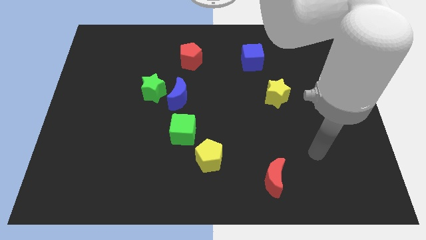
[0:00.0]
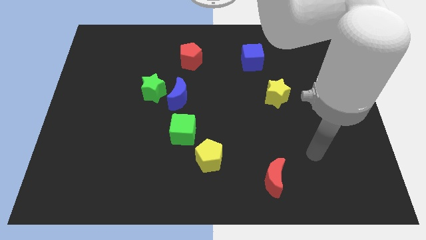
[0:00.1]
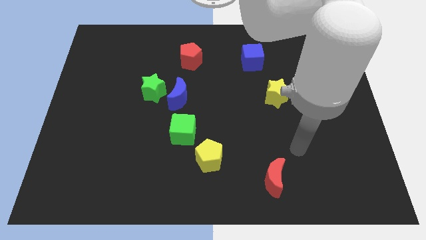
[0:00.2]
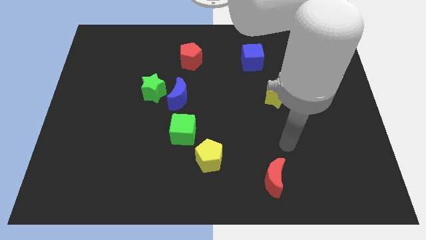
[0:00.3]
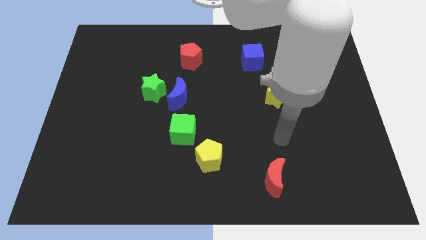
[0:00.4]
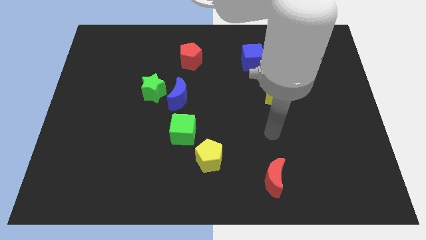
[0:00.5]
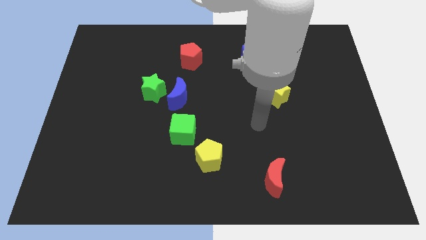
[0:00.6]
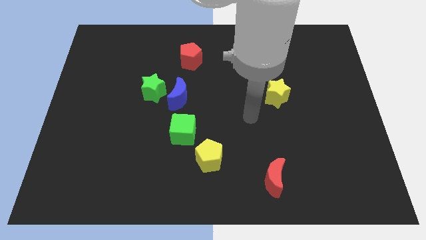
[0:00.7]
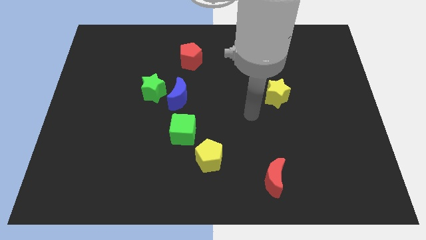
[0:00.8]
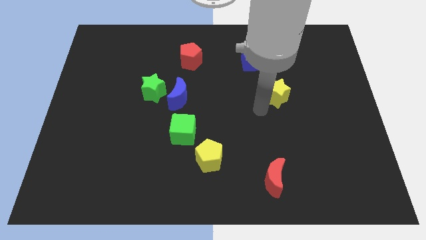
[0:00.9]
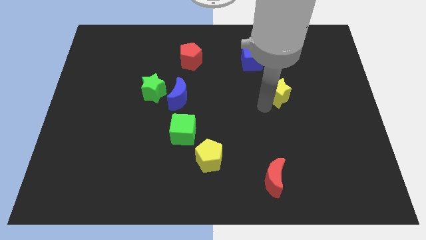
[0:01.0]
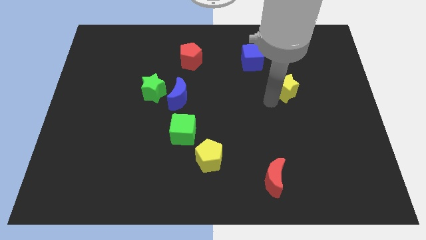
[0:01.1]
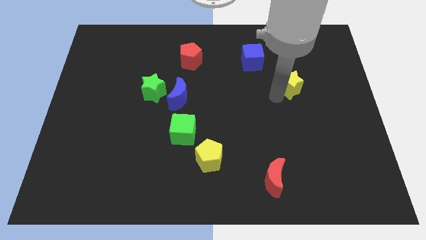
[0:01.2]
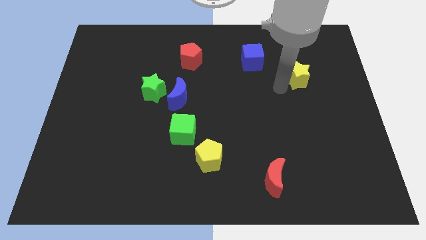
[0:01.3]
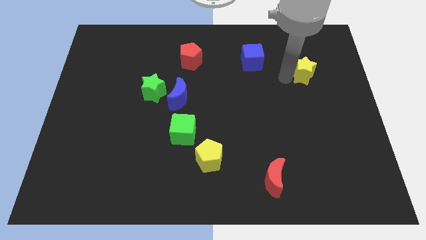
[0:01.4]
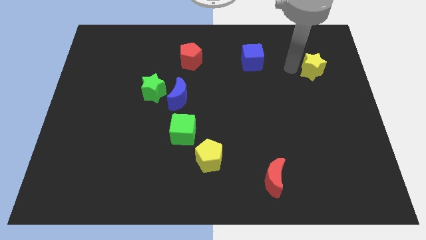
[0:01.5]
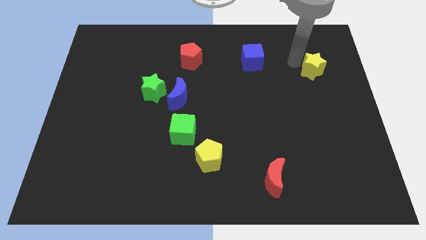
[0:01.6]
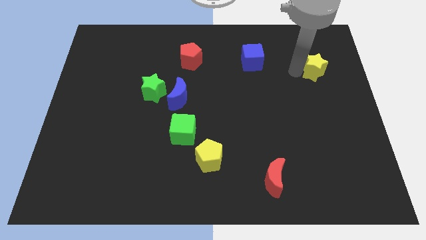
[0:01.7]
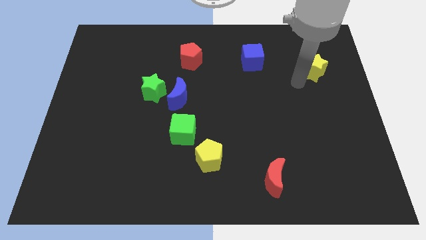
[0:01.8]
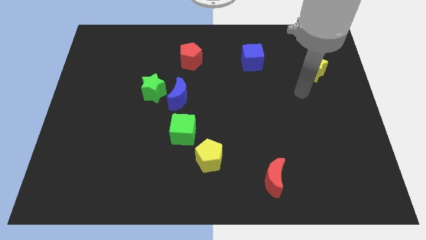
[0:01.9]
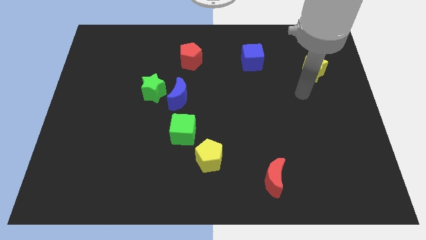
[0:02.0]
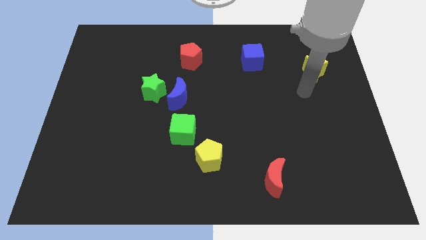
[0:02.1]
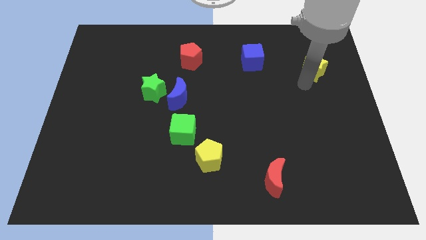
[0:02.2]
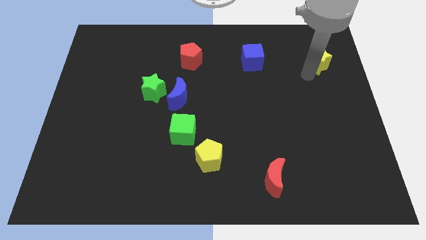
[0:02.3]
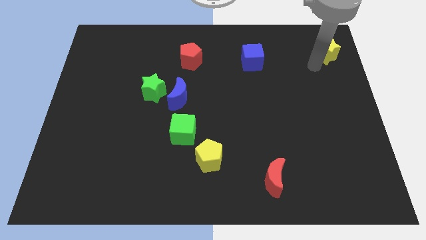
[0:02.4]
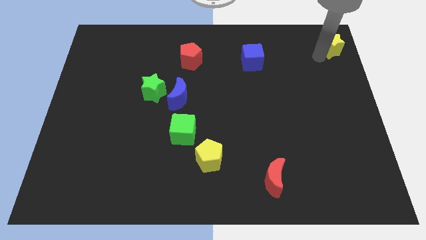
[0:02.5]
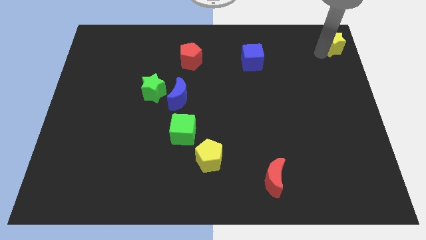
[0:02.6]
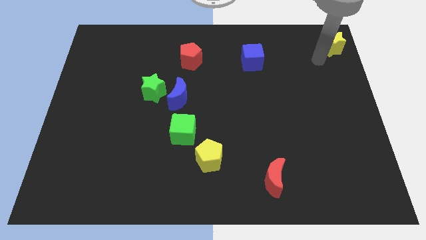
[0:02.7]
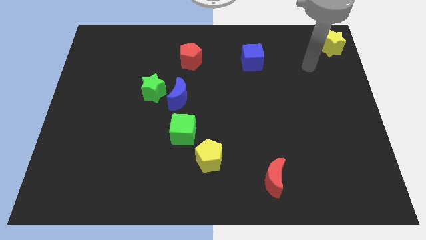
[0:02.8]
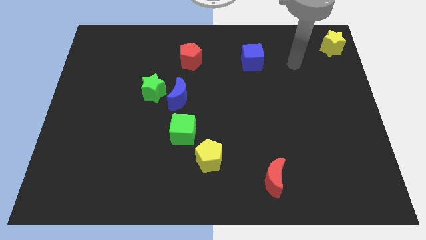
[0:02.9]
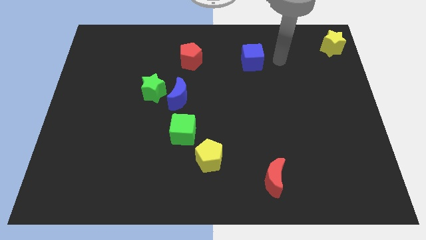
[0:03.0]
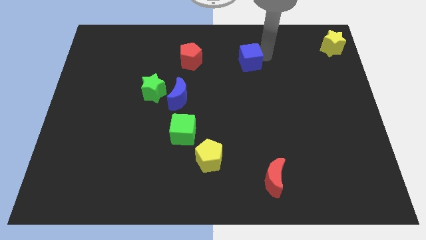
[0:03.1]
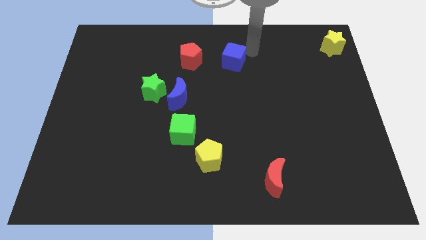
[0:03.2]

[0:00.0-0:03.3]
place yellow star to the top right corner of the board

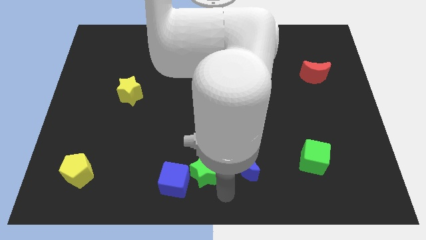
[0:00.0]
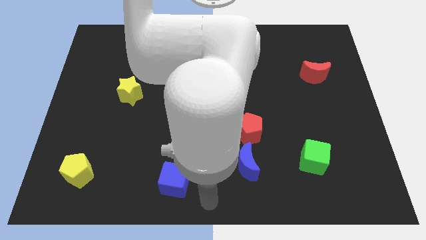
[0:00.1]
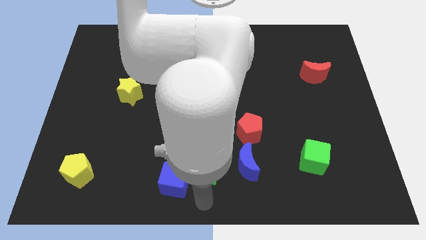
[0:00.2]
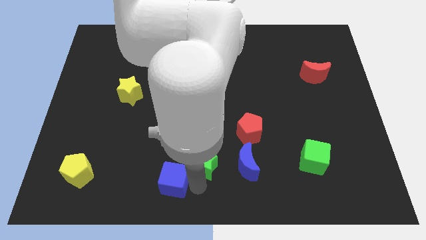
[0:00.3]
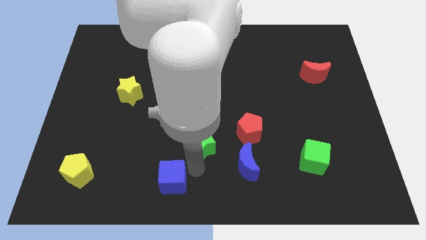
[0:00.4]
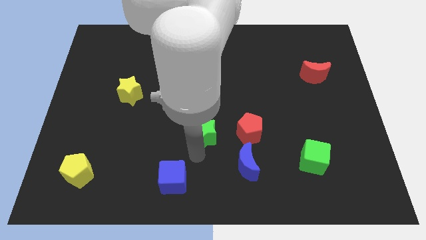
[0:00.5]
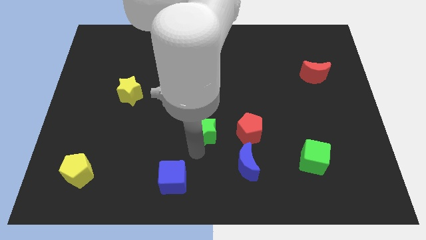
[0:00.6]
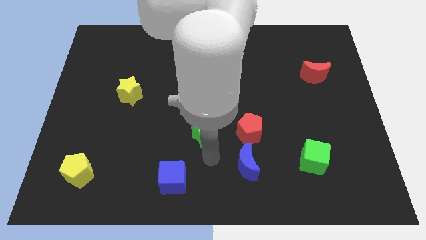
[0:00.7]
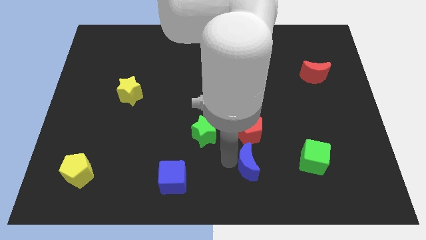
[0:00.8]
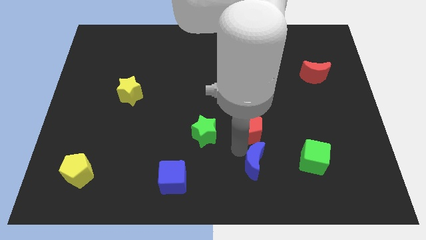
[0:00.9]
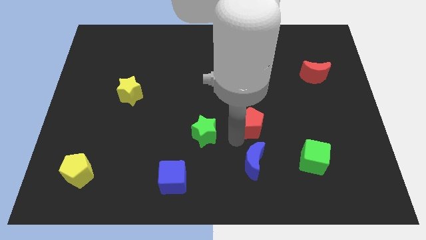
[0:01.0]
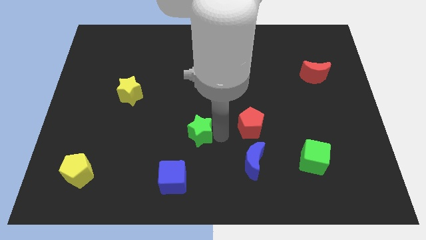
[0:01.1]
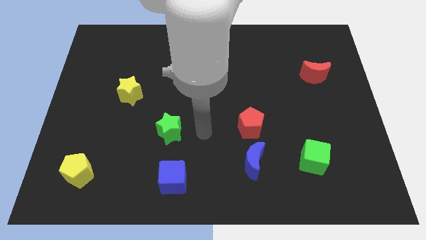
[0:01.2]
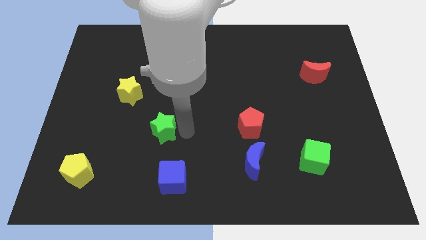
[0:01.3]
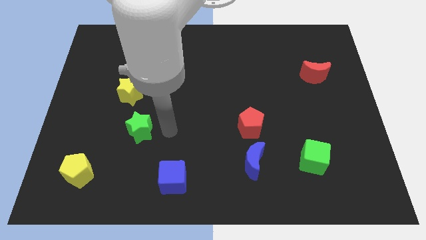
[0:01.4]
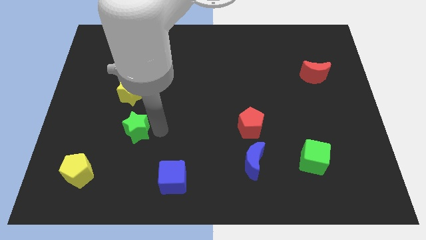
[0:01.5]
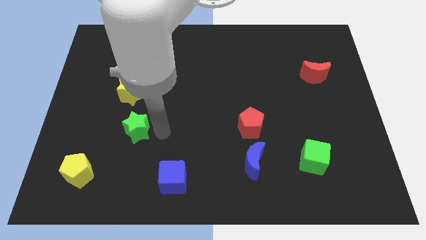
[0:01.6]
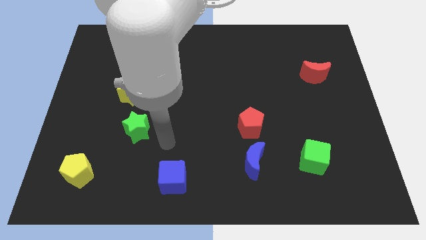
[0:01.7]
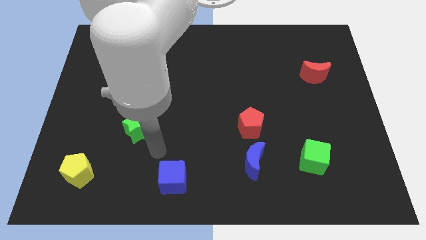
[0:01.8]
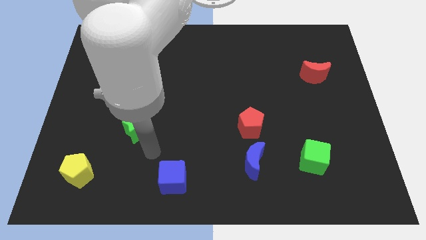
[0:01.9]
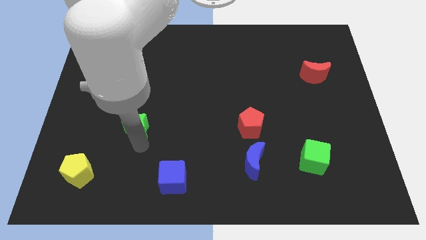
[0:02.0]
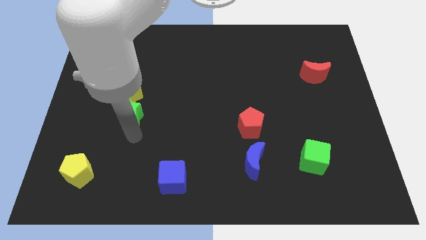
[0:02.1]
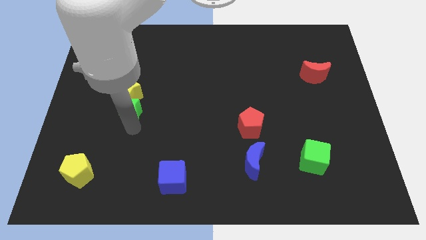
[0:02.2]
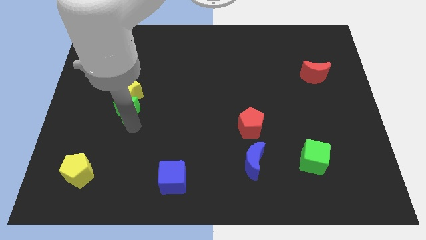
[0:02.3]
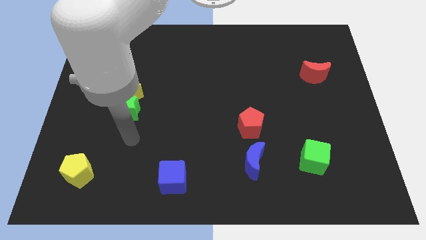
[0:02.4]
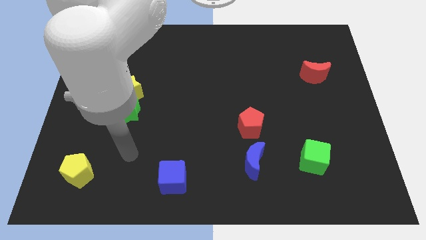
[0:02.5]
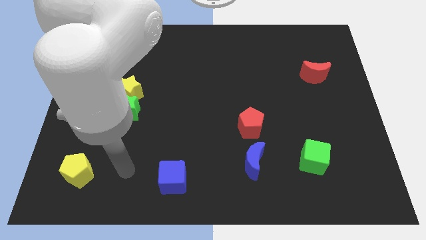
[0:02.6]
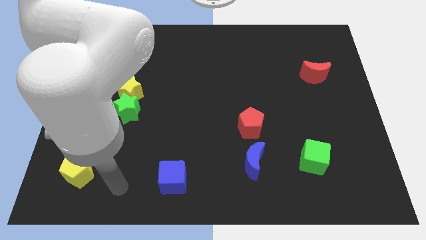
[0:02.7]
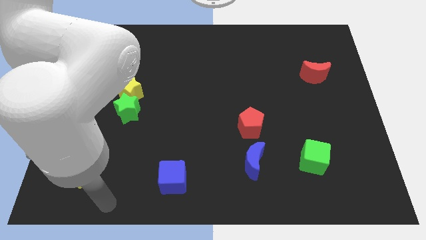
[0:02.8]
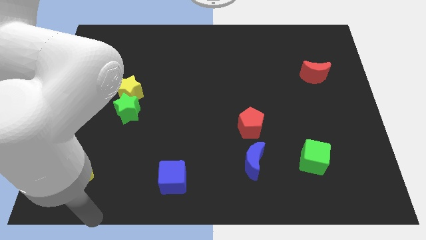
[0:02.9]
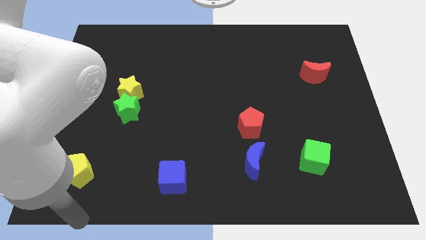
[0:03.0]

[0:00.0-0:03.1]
push the green star to the bottom of the yellow star

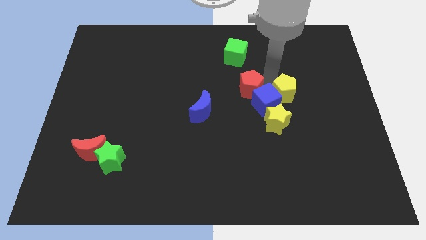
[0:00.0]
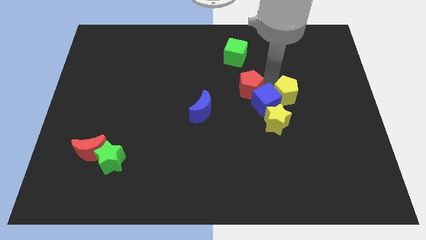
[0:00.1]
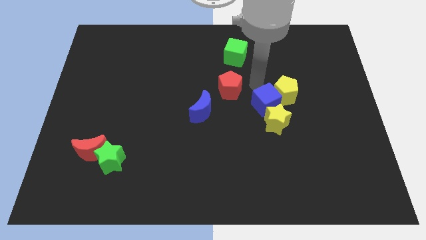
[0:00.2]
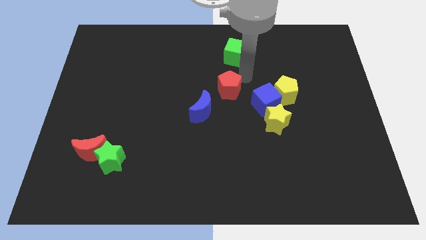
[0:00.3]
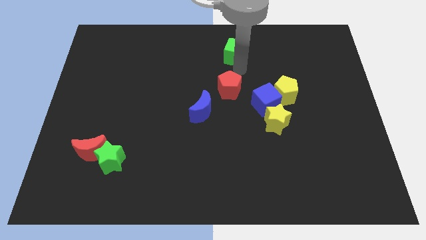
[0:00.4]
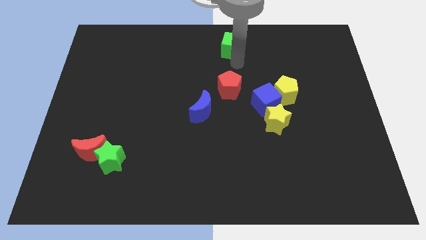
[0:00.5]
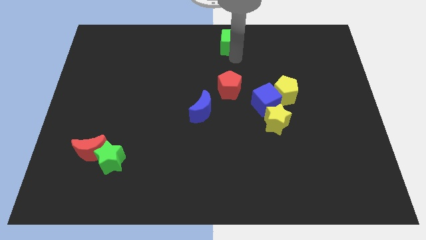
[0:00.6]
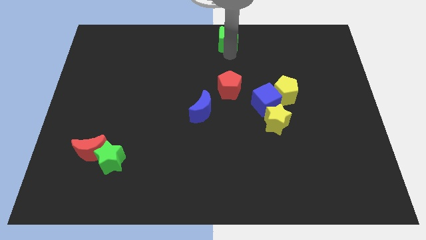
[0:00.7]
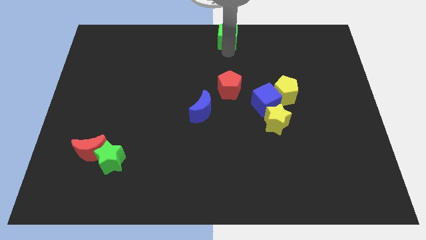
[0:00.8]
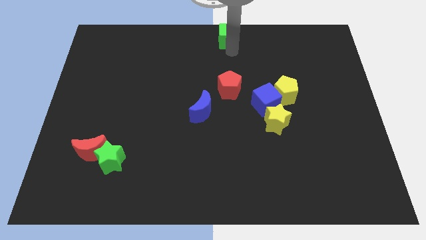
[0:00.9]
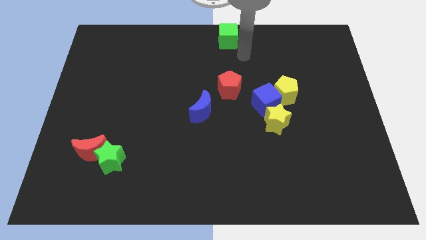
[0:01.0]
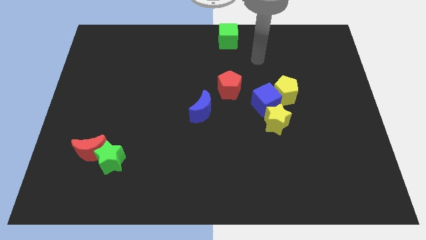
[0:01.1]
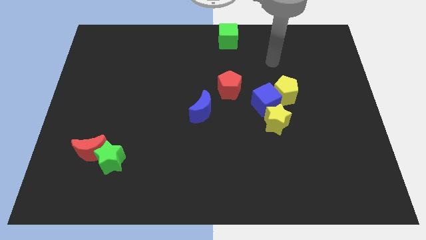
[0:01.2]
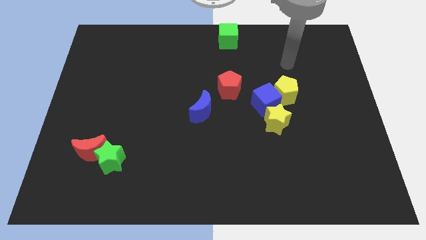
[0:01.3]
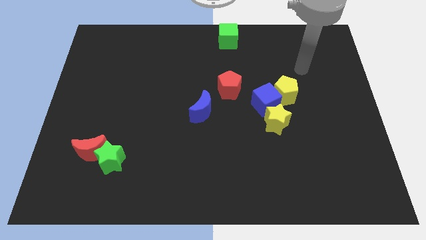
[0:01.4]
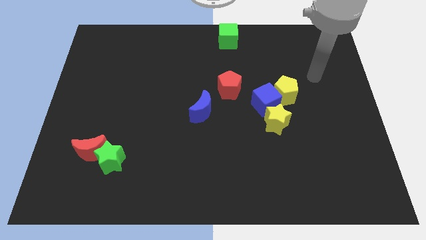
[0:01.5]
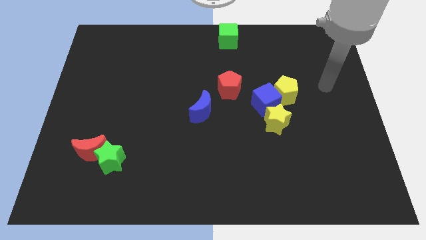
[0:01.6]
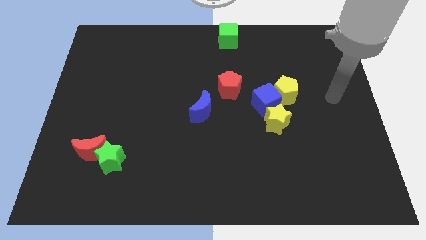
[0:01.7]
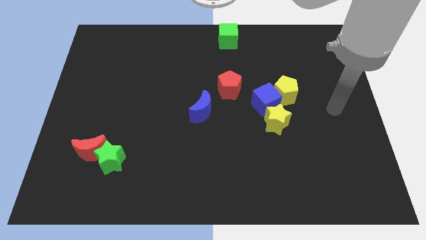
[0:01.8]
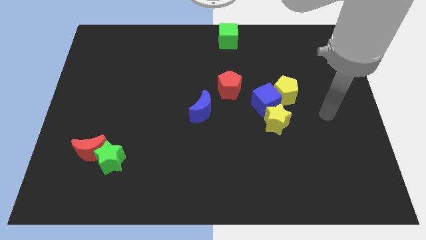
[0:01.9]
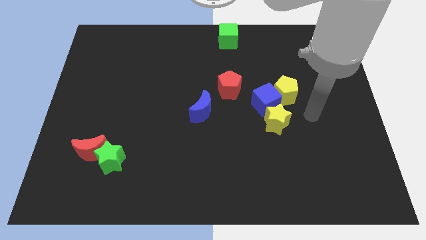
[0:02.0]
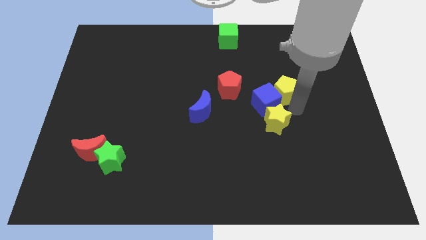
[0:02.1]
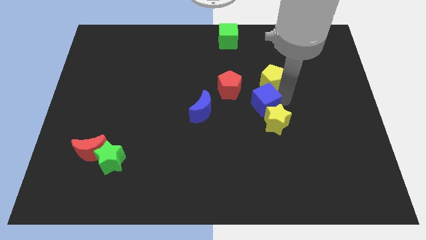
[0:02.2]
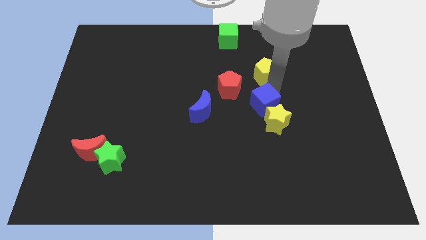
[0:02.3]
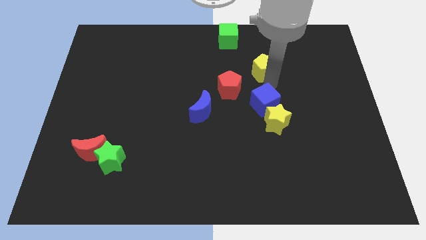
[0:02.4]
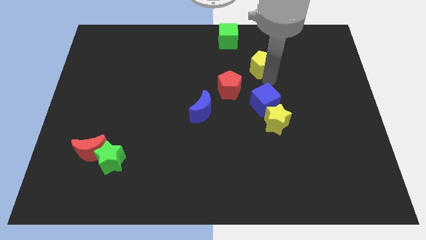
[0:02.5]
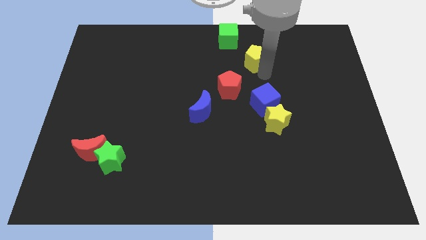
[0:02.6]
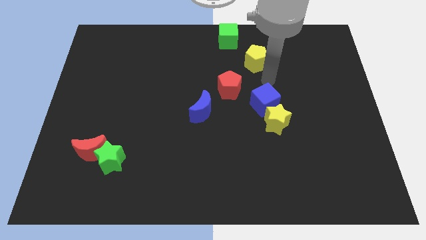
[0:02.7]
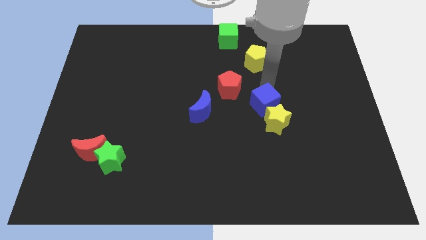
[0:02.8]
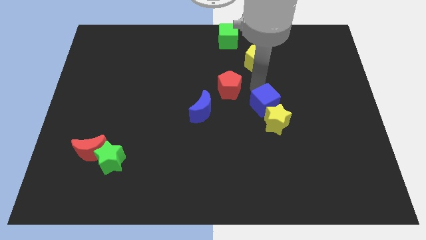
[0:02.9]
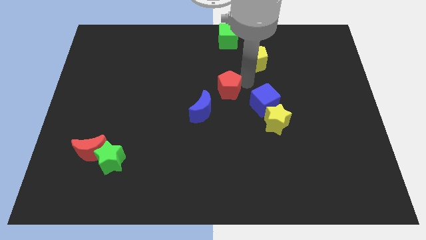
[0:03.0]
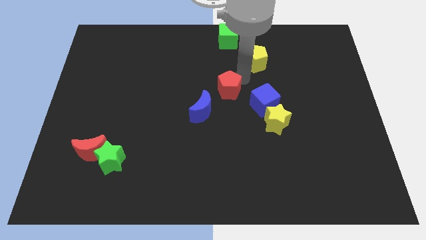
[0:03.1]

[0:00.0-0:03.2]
push yellow pentagon above blue cube
